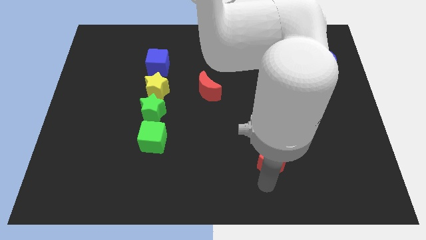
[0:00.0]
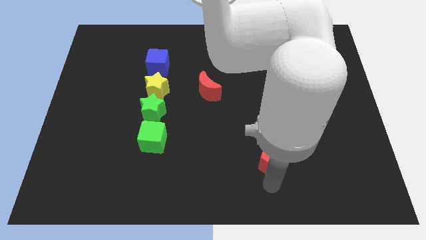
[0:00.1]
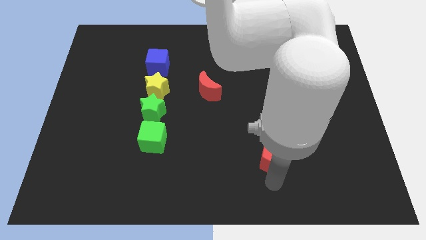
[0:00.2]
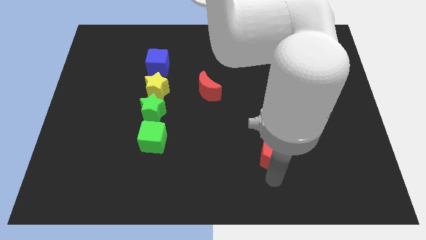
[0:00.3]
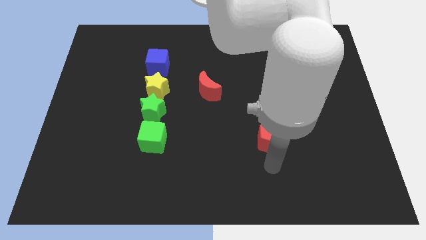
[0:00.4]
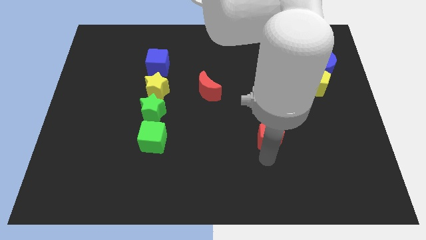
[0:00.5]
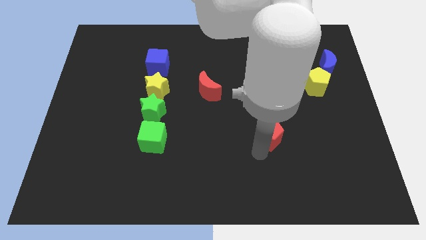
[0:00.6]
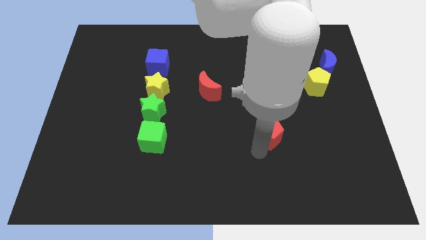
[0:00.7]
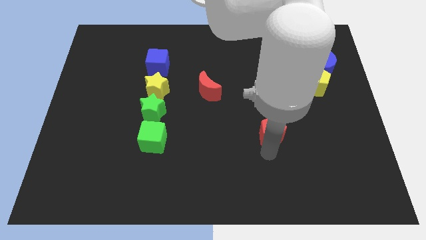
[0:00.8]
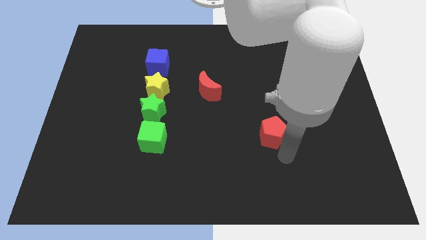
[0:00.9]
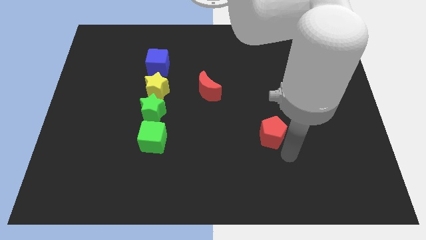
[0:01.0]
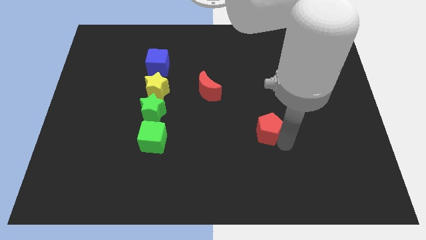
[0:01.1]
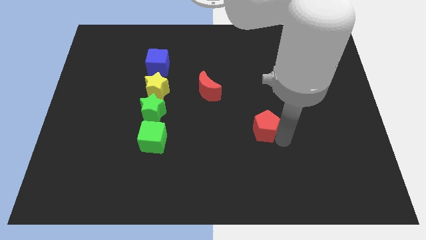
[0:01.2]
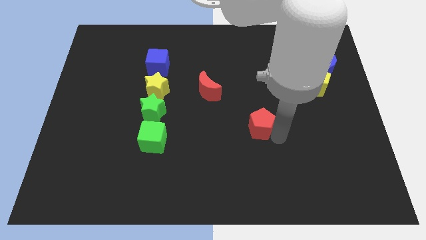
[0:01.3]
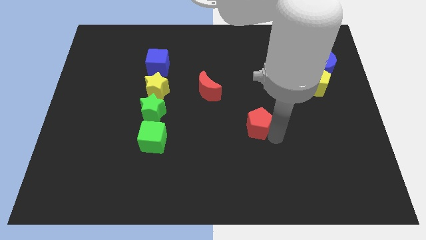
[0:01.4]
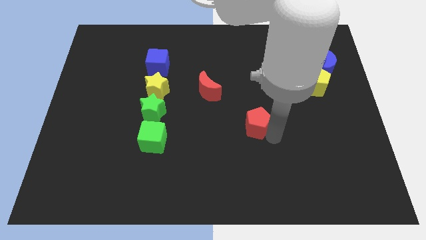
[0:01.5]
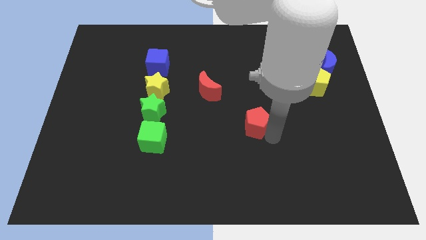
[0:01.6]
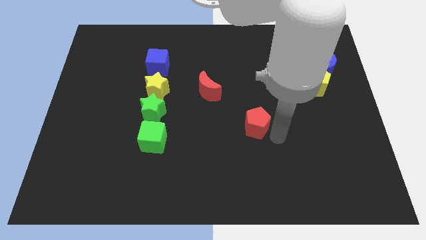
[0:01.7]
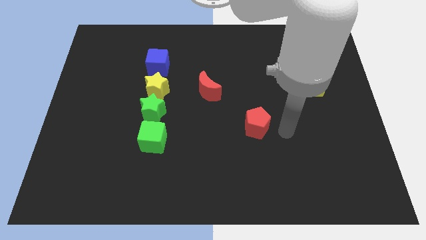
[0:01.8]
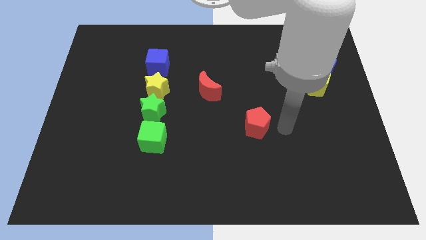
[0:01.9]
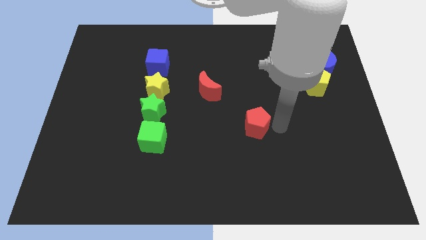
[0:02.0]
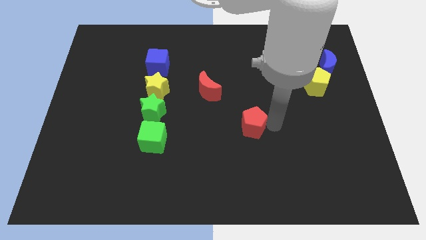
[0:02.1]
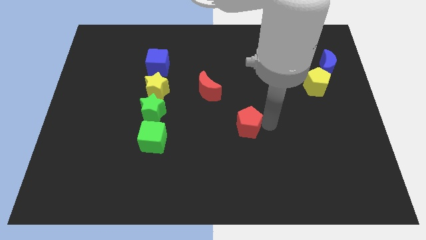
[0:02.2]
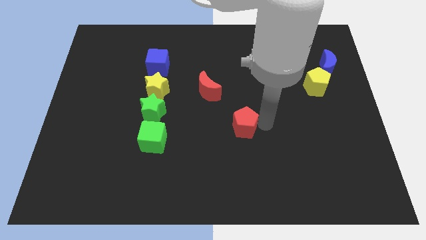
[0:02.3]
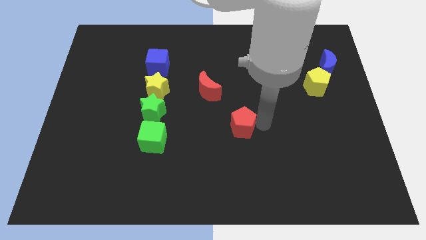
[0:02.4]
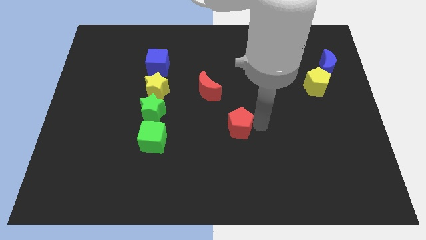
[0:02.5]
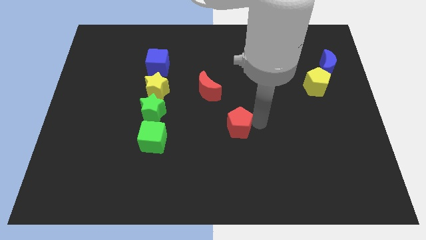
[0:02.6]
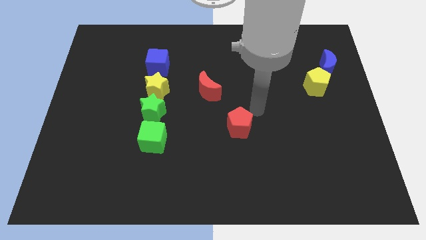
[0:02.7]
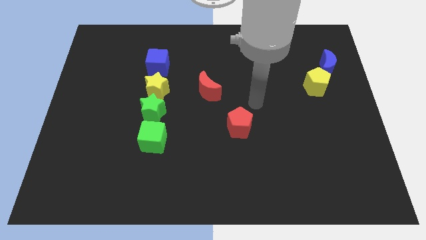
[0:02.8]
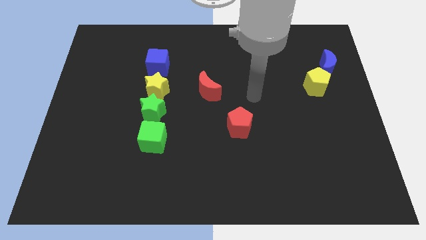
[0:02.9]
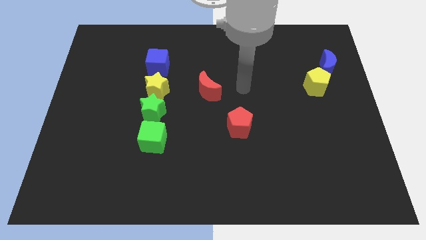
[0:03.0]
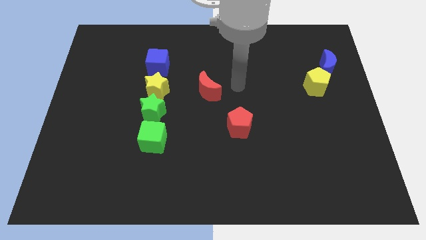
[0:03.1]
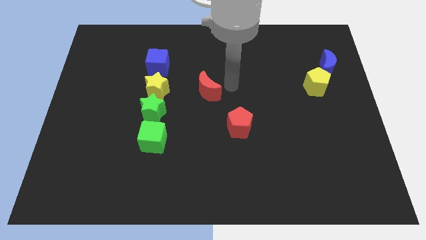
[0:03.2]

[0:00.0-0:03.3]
move the red pentagon to the center of the board

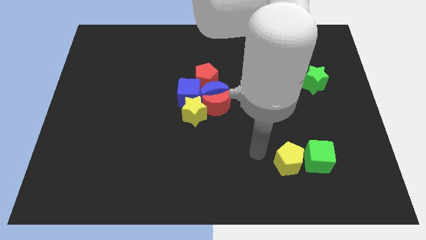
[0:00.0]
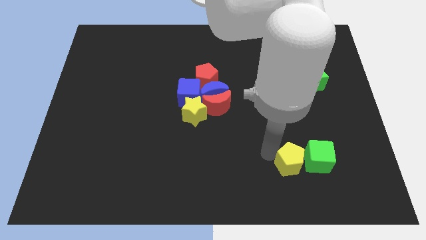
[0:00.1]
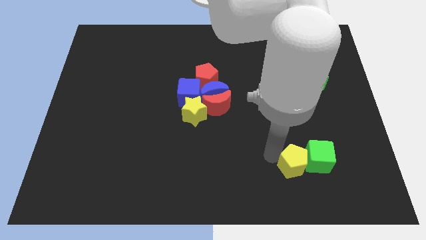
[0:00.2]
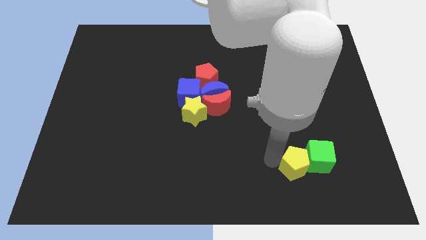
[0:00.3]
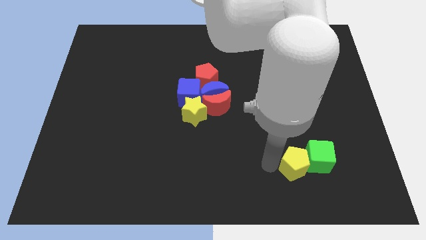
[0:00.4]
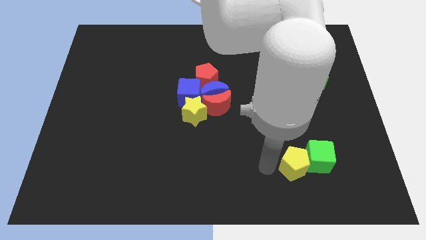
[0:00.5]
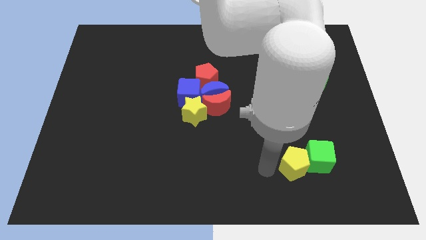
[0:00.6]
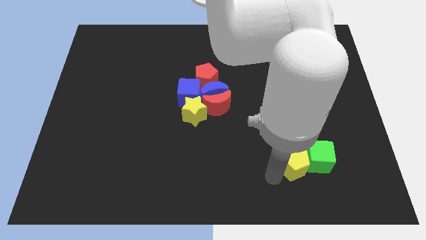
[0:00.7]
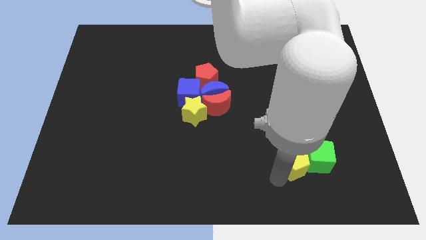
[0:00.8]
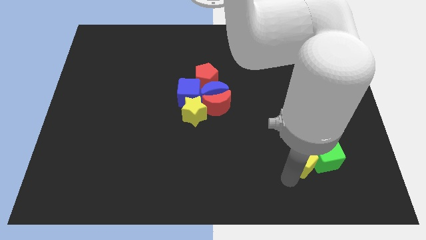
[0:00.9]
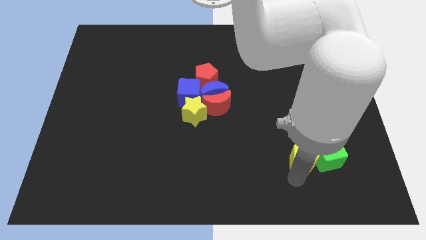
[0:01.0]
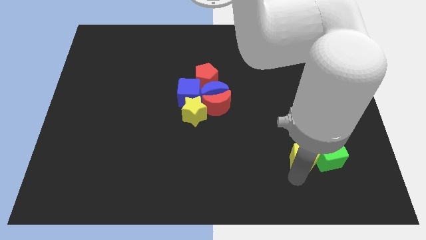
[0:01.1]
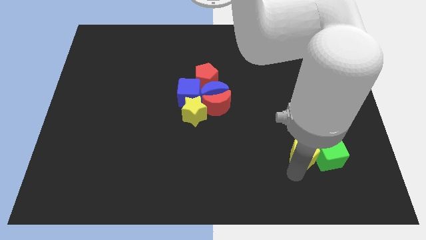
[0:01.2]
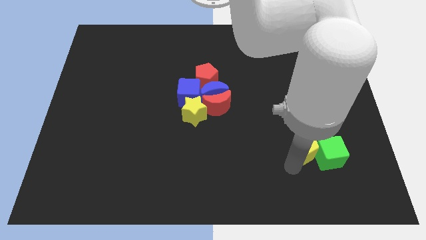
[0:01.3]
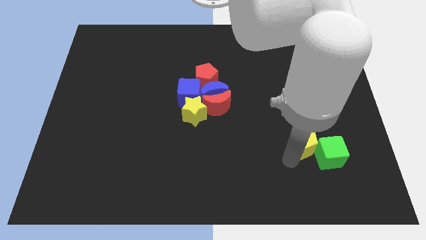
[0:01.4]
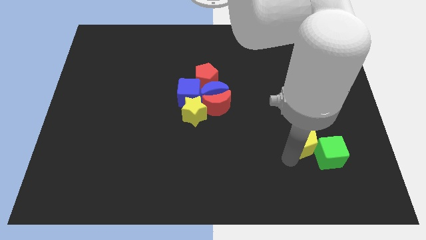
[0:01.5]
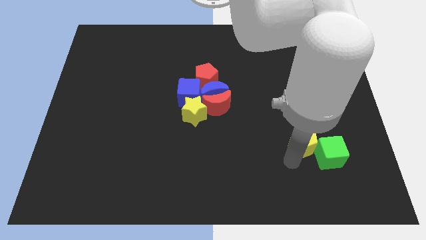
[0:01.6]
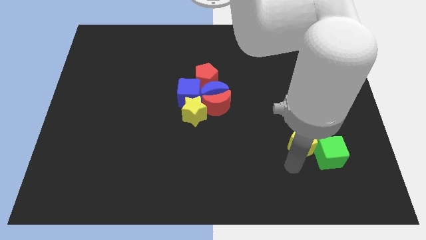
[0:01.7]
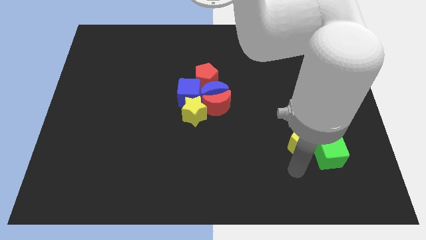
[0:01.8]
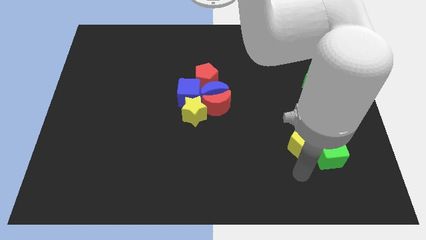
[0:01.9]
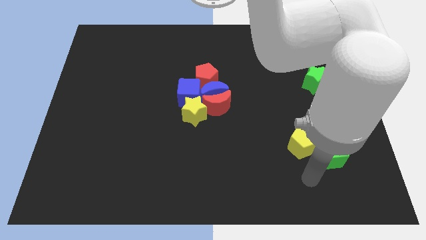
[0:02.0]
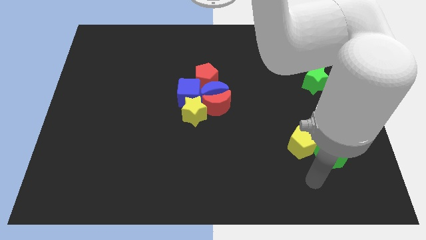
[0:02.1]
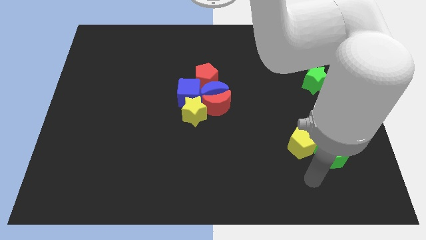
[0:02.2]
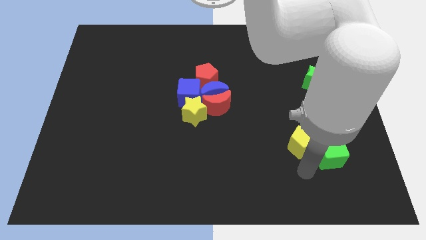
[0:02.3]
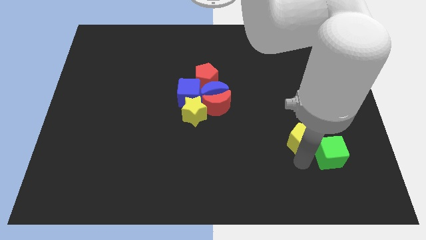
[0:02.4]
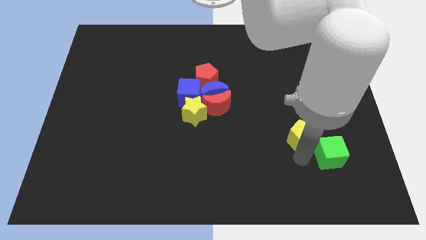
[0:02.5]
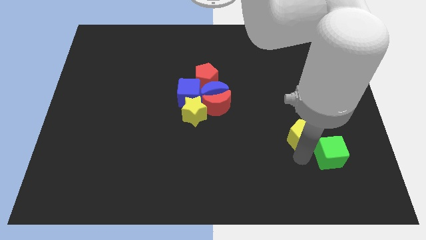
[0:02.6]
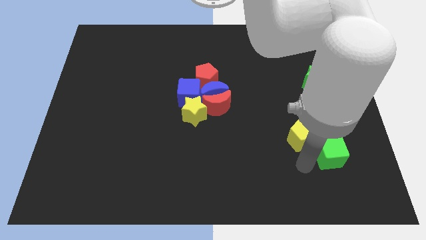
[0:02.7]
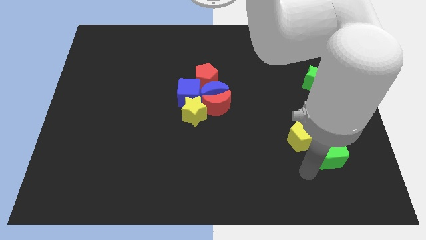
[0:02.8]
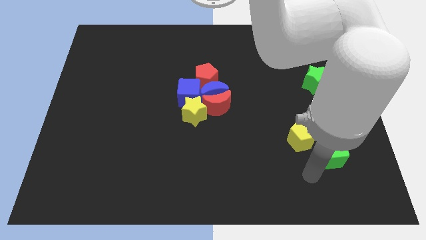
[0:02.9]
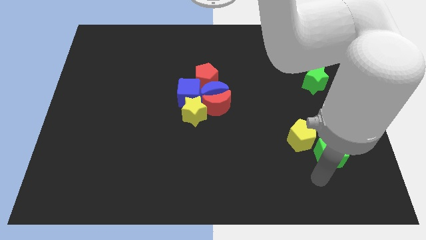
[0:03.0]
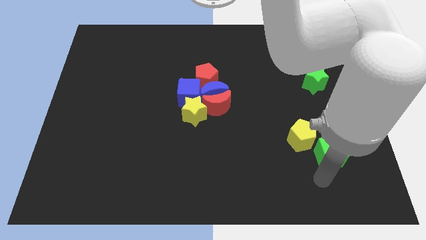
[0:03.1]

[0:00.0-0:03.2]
separate the yellow pentagon from the green cube

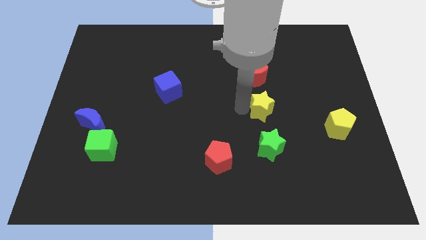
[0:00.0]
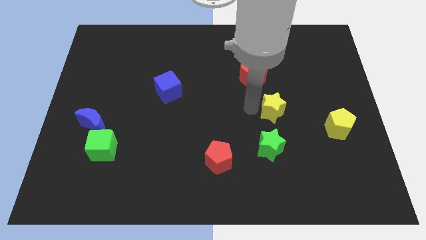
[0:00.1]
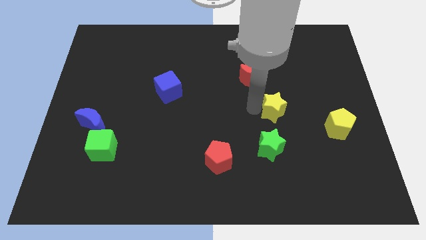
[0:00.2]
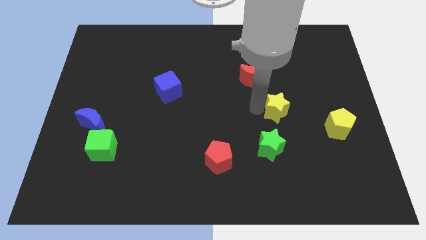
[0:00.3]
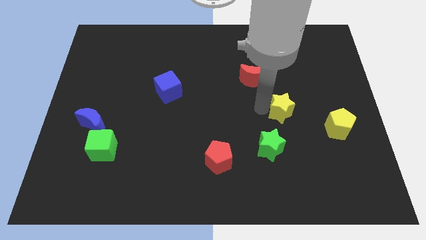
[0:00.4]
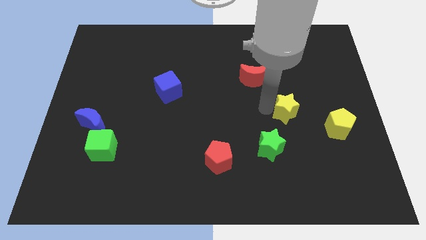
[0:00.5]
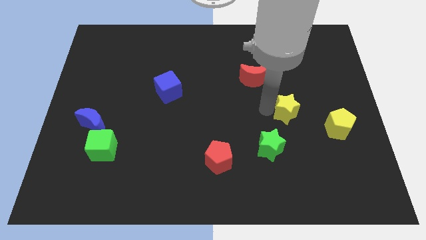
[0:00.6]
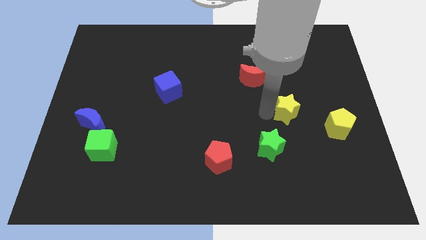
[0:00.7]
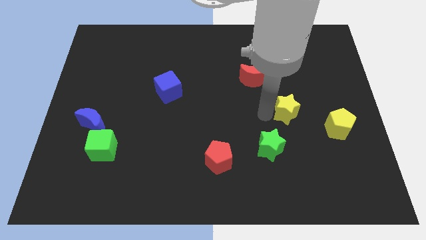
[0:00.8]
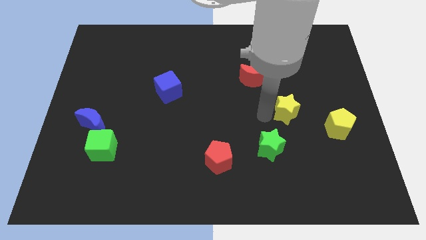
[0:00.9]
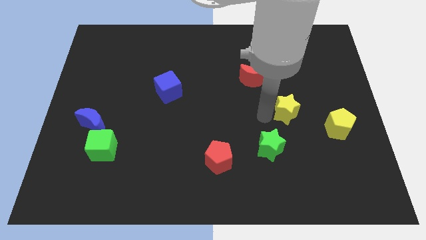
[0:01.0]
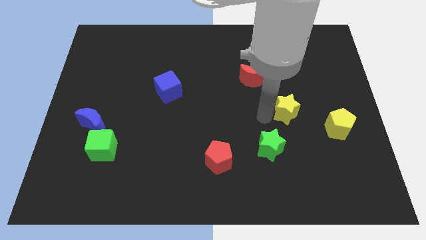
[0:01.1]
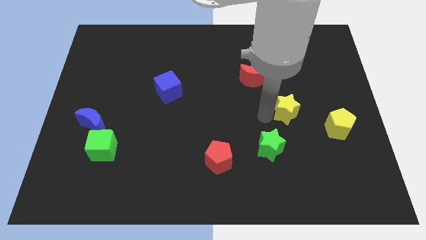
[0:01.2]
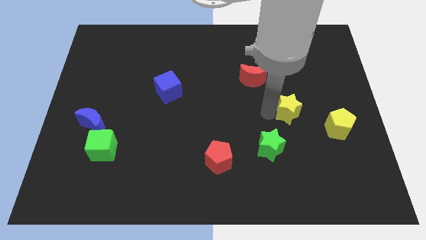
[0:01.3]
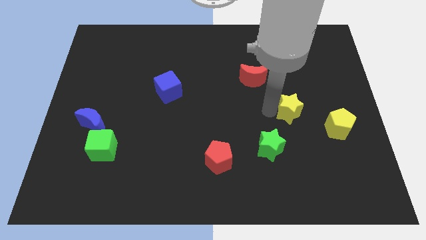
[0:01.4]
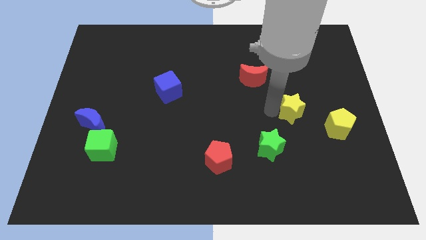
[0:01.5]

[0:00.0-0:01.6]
push the yellow star towards the yellow pentagon

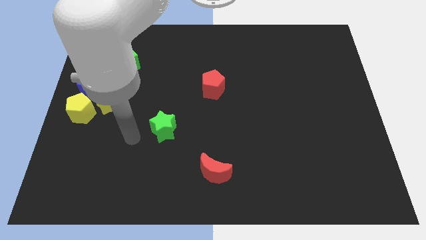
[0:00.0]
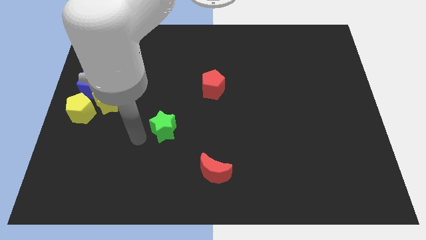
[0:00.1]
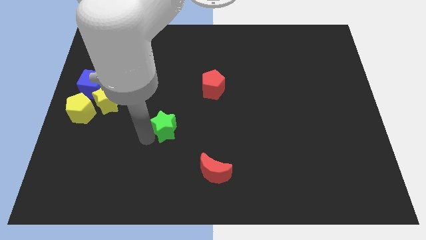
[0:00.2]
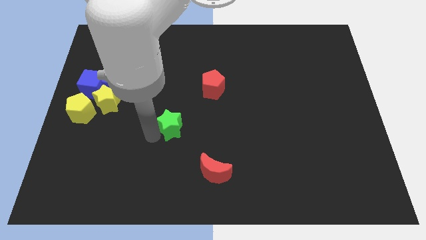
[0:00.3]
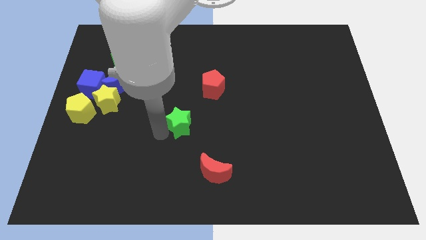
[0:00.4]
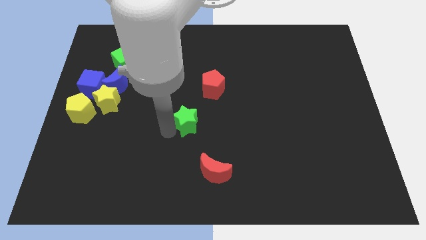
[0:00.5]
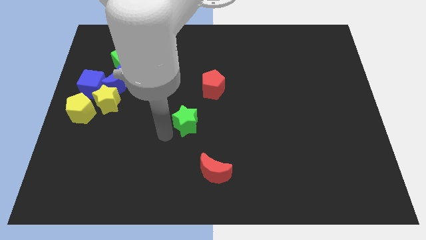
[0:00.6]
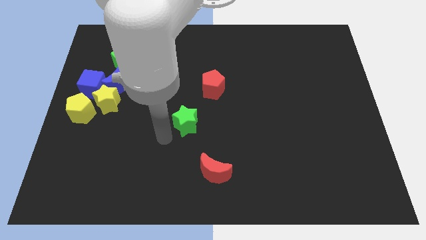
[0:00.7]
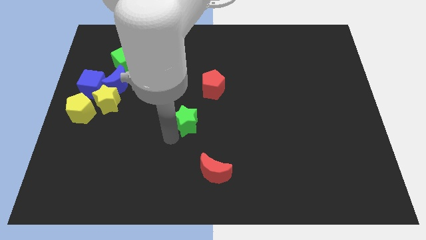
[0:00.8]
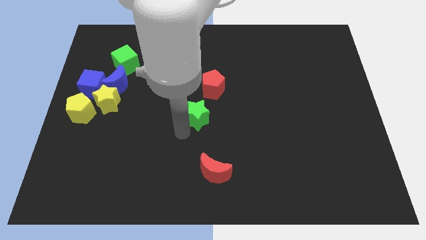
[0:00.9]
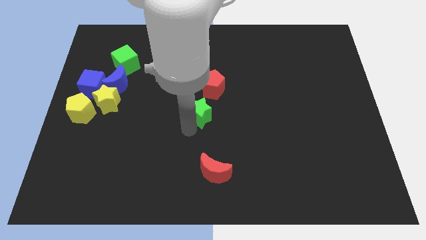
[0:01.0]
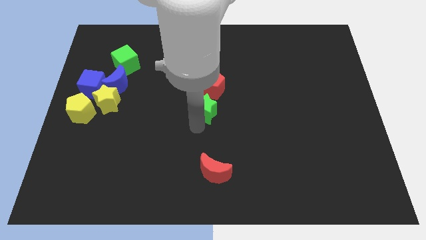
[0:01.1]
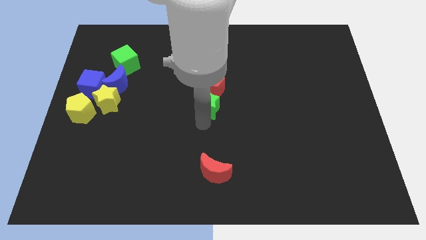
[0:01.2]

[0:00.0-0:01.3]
move the green star to the bottom of the red pentagon
